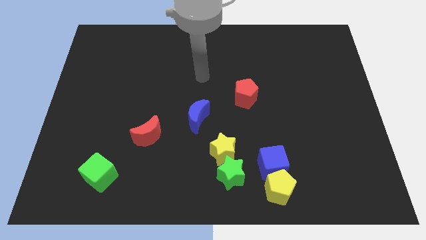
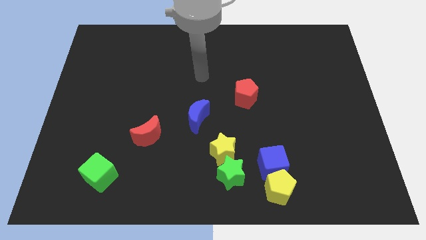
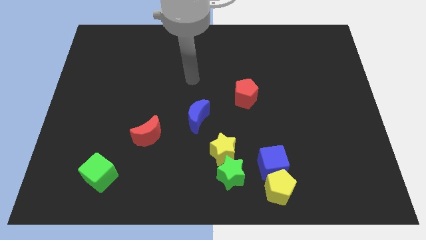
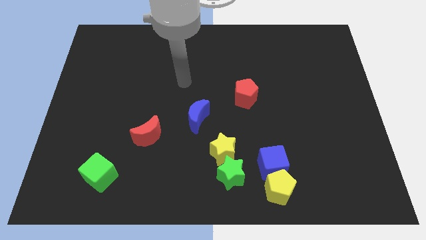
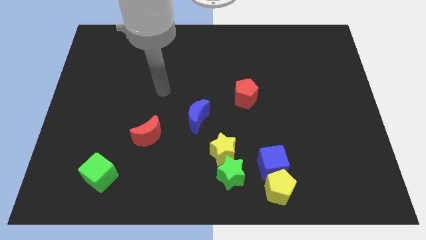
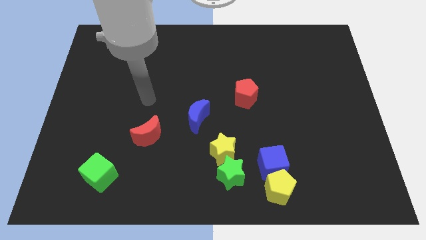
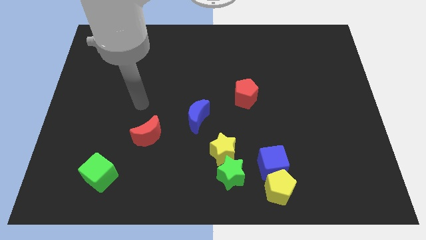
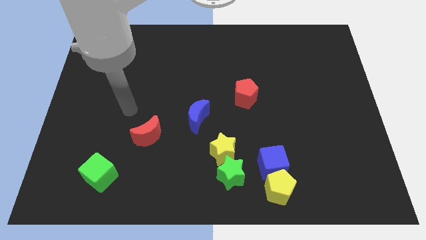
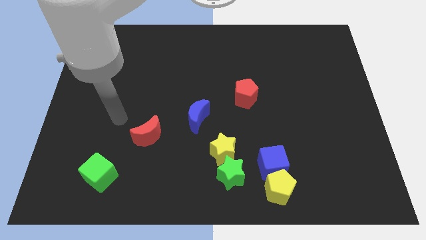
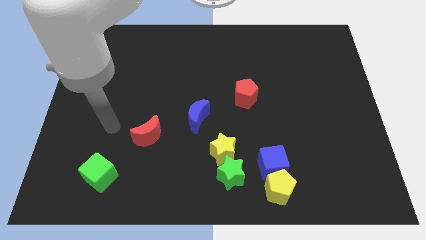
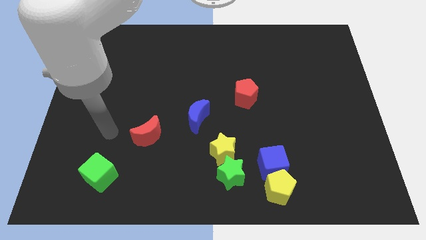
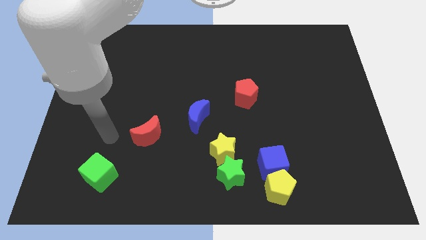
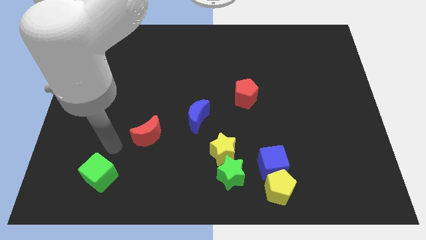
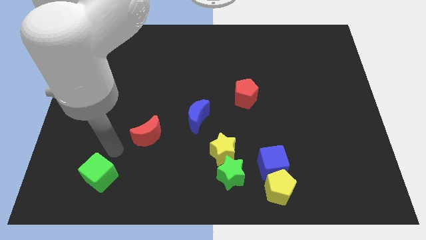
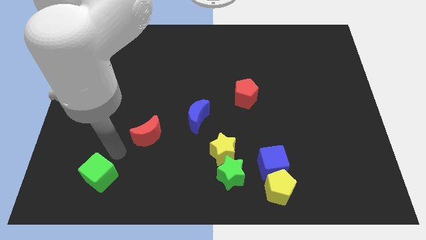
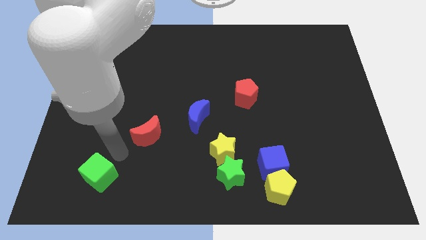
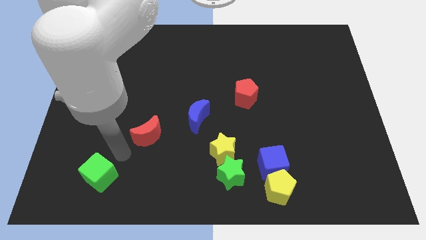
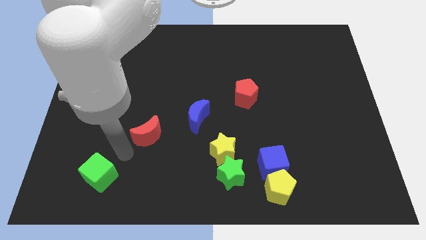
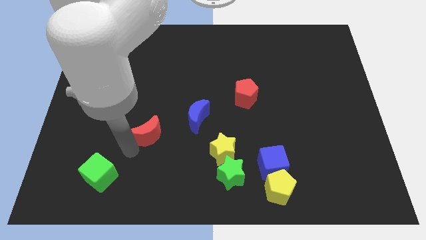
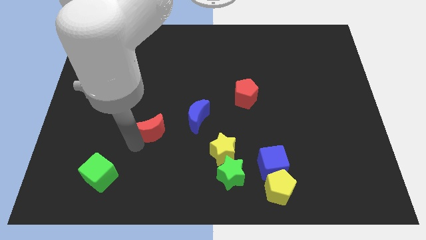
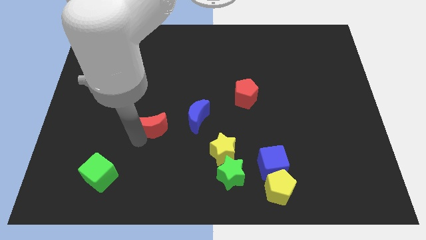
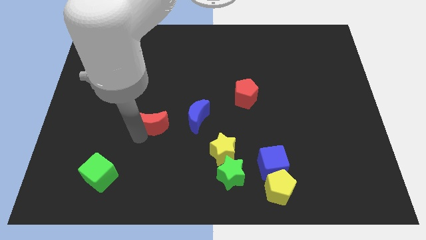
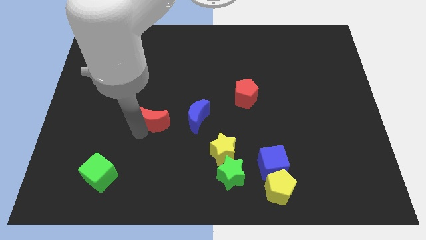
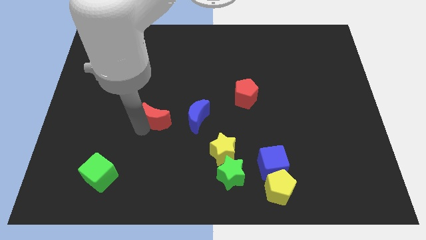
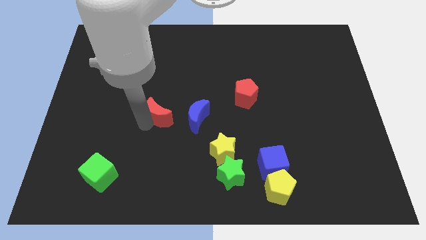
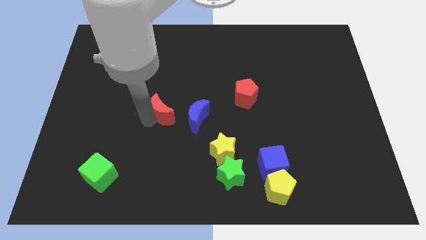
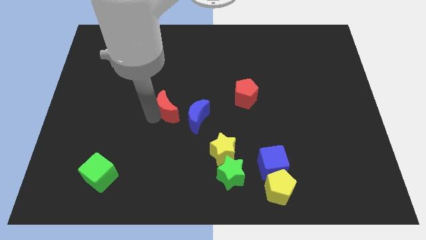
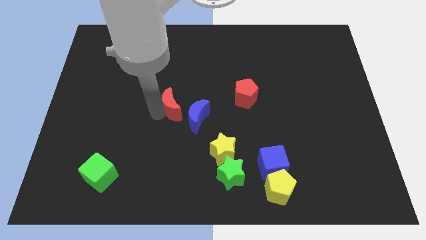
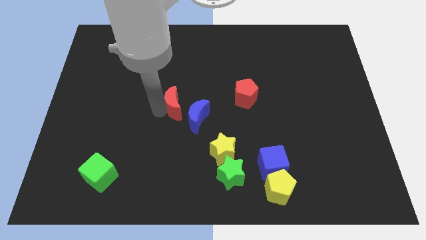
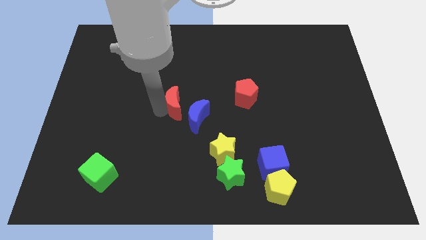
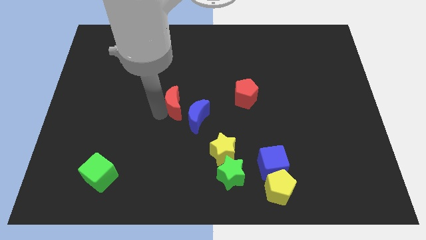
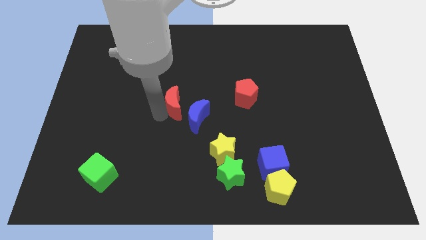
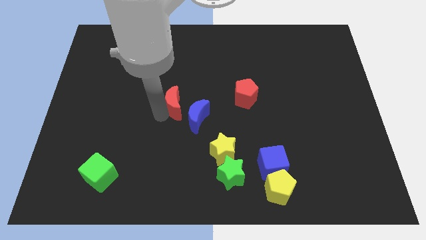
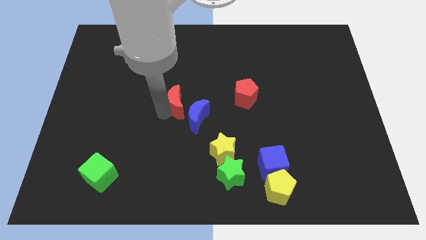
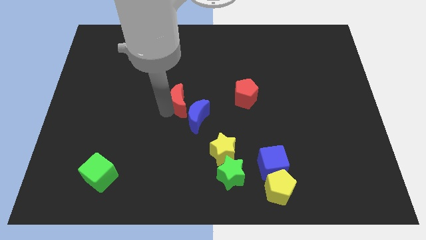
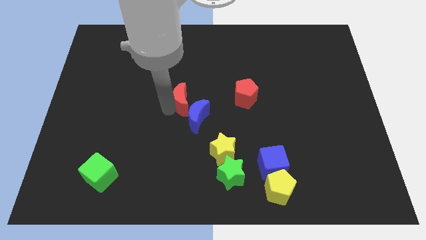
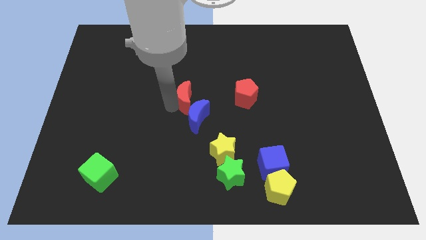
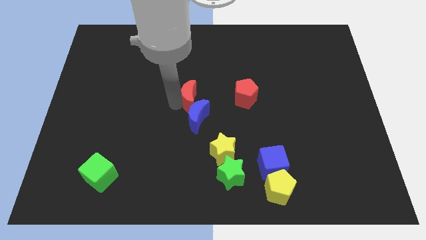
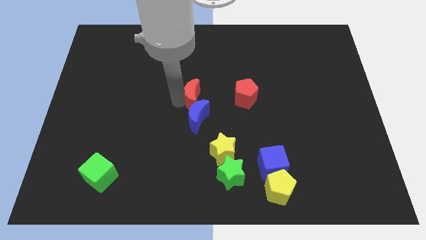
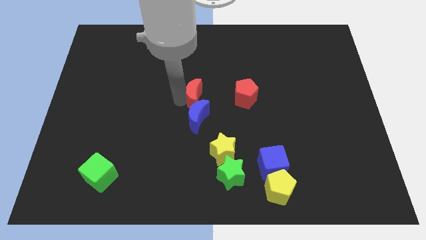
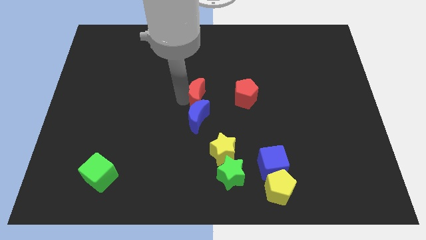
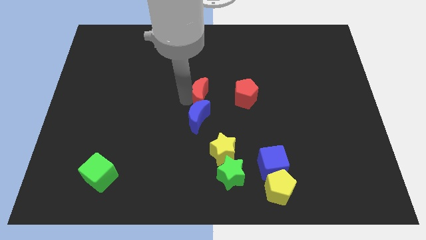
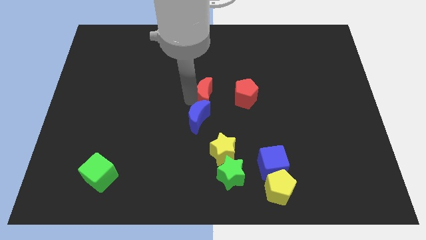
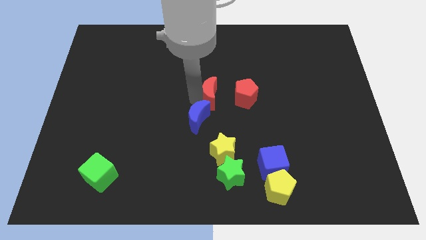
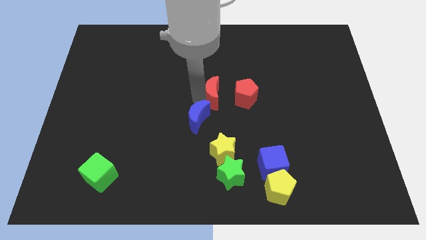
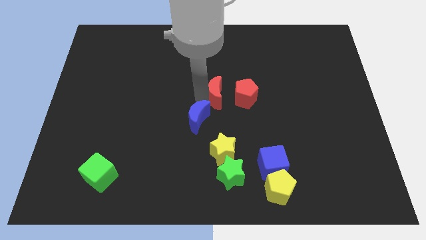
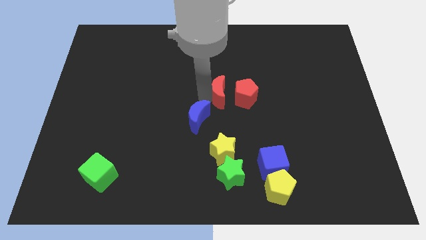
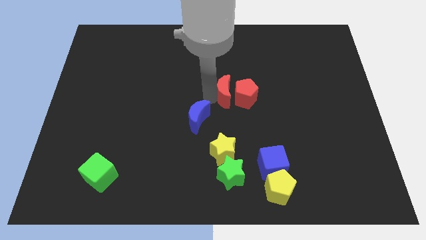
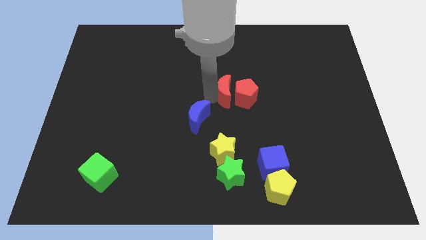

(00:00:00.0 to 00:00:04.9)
slide the red moon next to the red pentagon

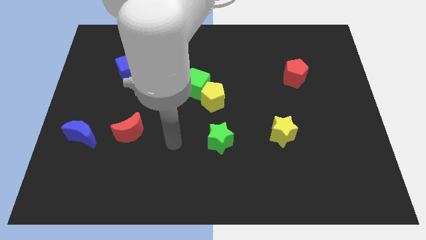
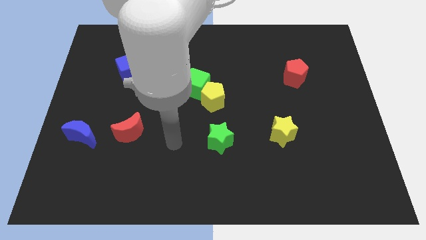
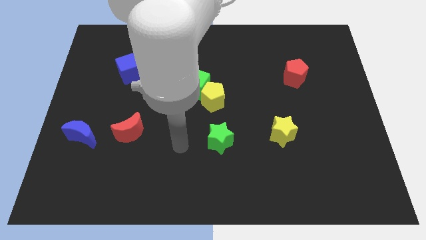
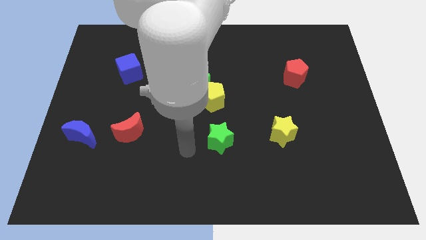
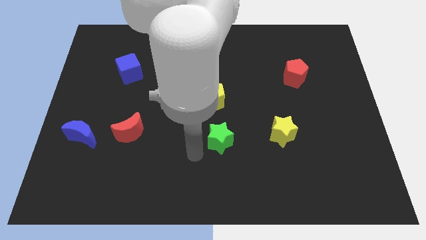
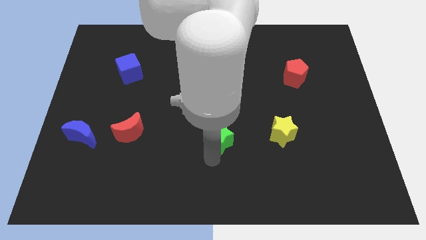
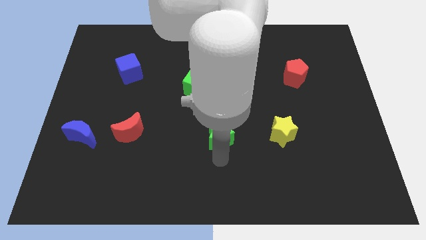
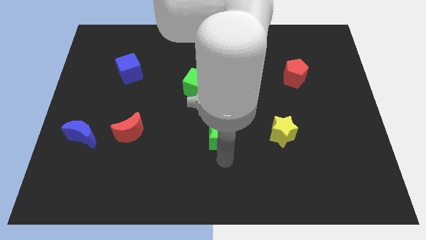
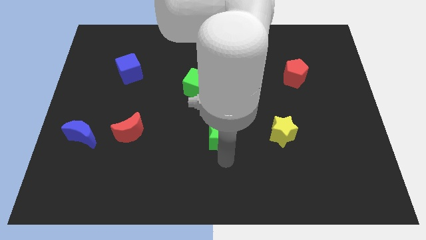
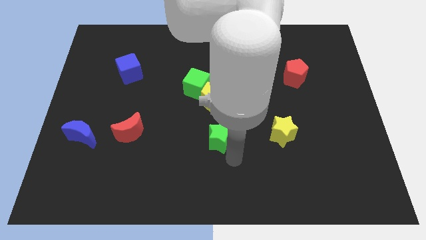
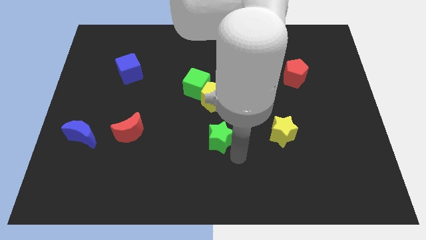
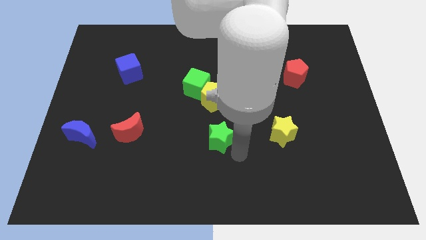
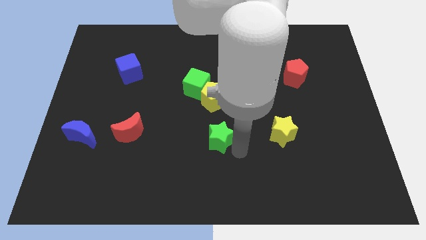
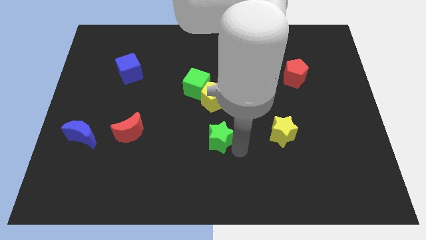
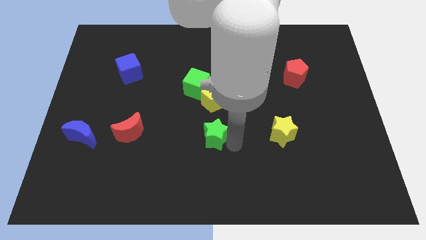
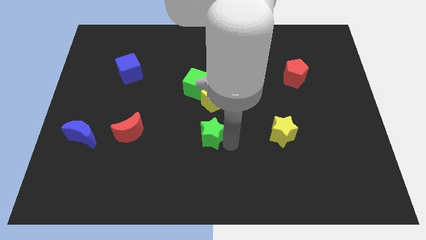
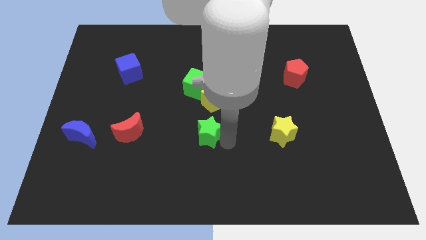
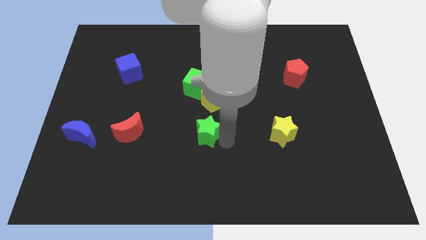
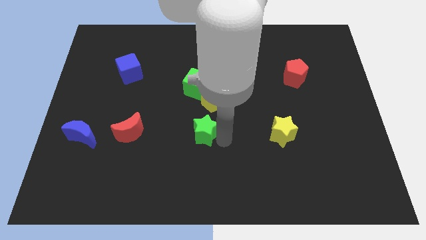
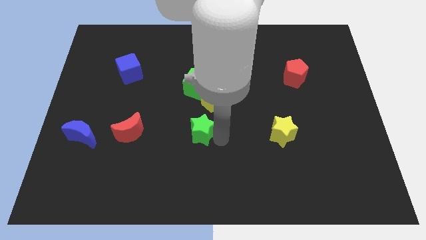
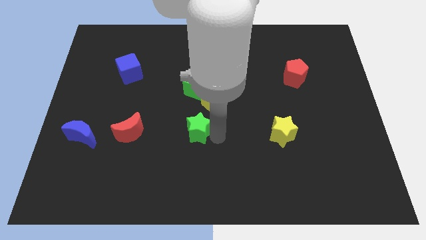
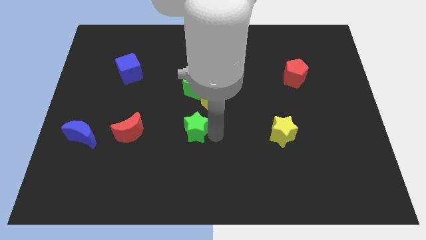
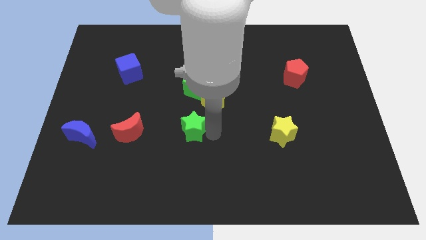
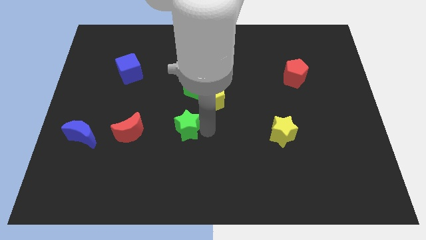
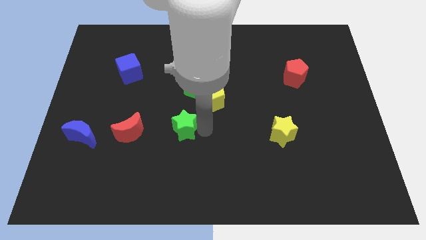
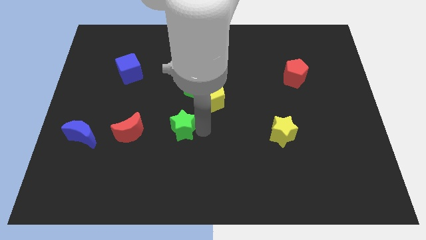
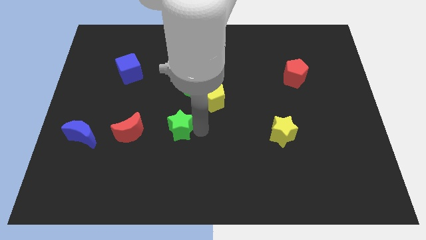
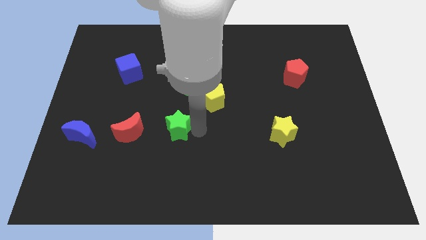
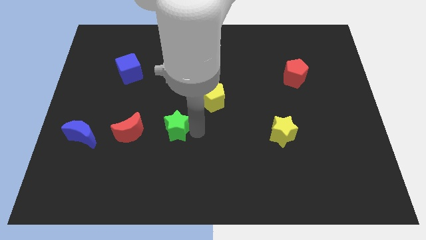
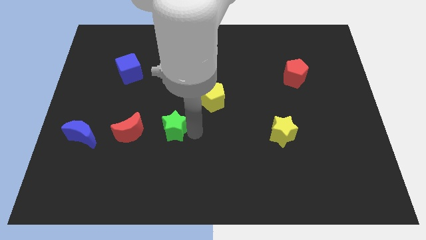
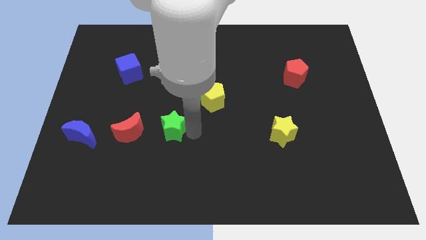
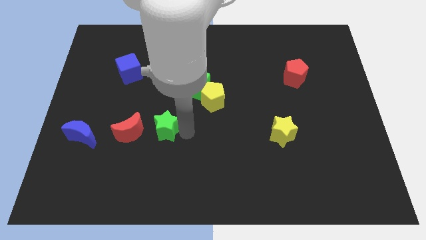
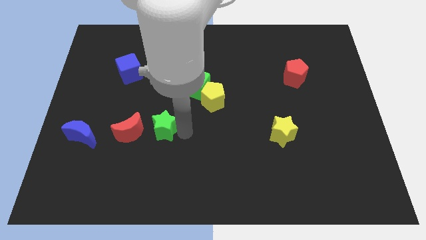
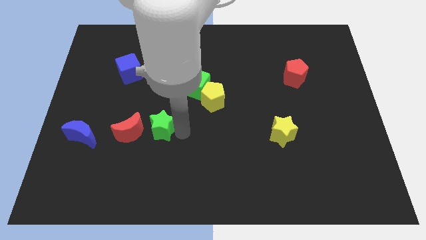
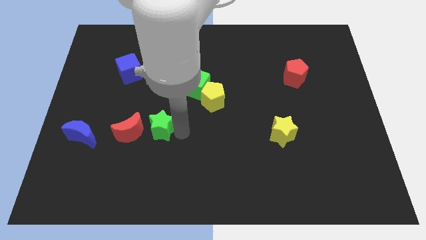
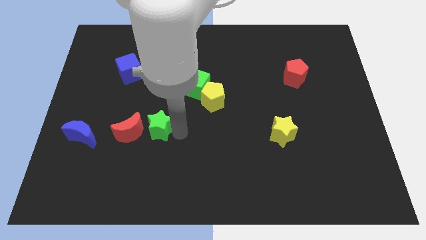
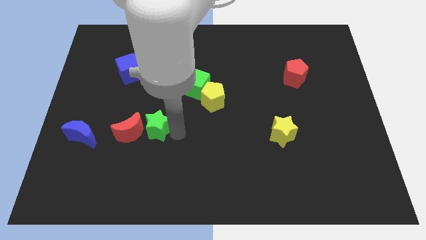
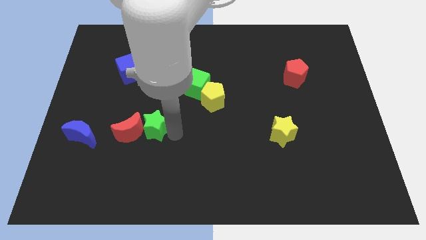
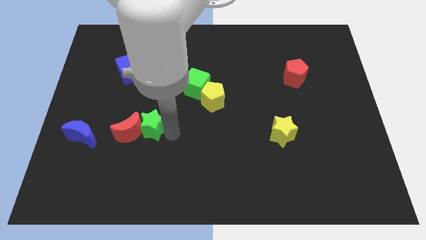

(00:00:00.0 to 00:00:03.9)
push the green star close to the red moon
